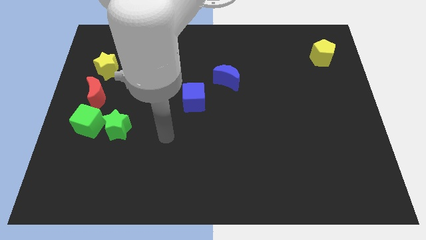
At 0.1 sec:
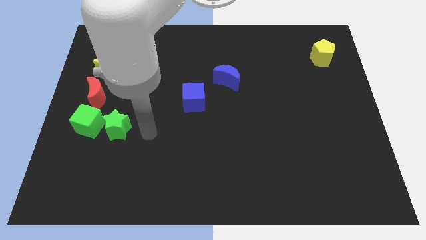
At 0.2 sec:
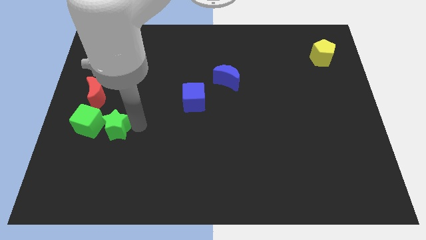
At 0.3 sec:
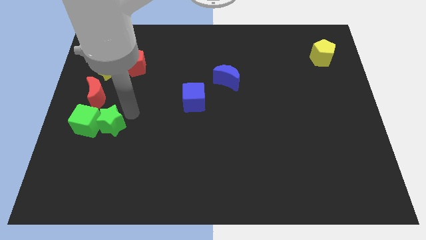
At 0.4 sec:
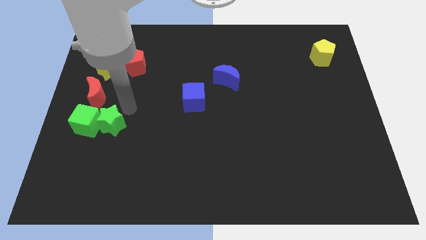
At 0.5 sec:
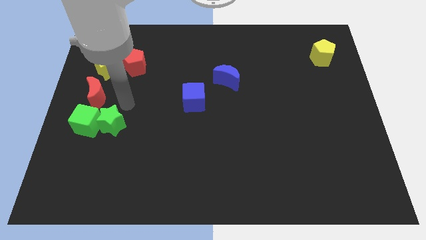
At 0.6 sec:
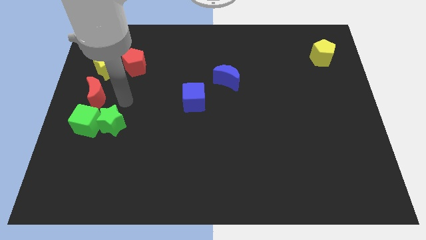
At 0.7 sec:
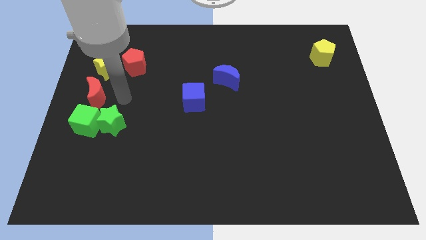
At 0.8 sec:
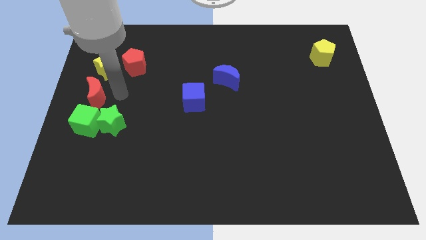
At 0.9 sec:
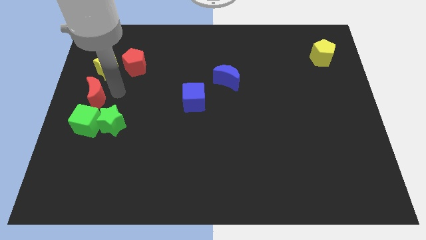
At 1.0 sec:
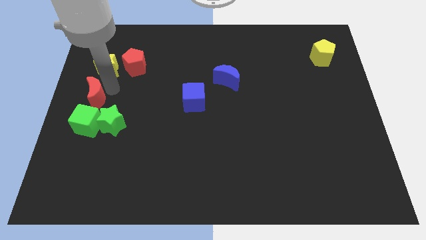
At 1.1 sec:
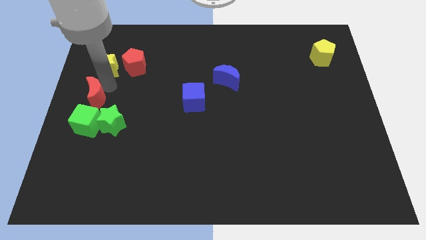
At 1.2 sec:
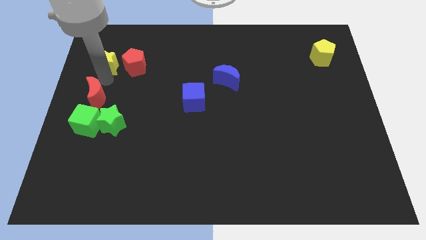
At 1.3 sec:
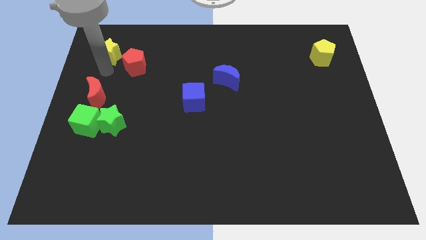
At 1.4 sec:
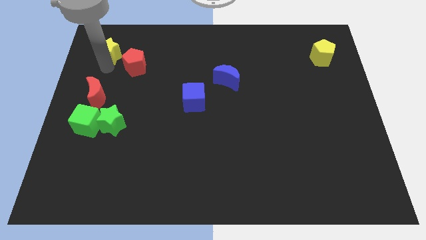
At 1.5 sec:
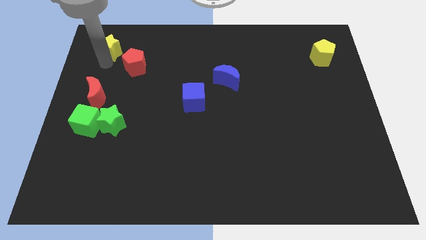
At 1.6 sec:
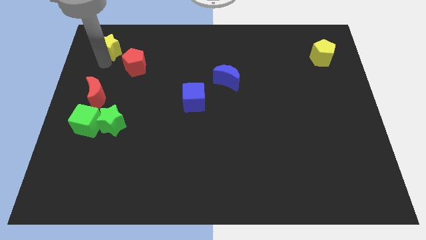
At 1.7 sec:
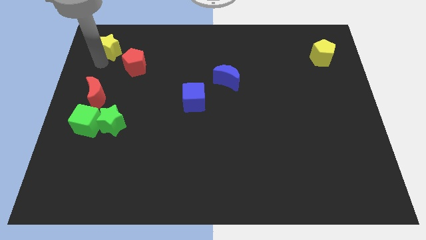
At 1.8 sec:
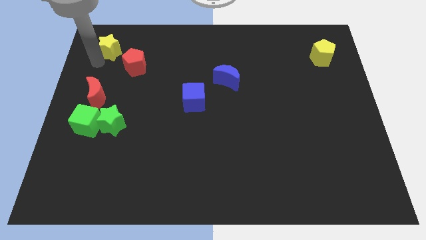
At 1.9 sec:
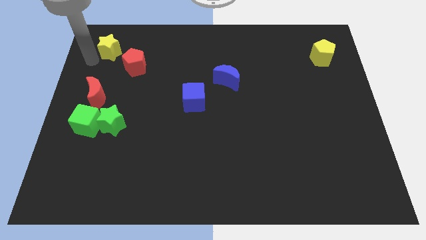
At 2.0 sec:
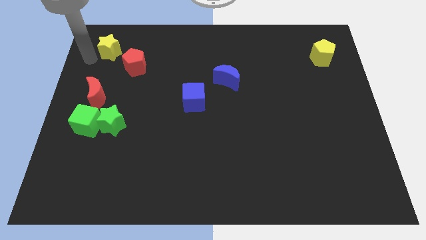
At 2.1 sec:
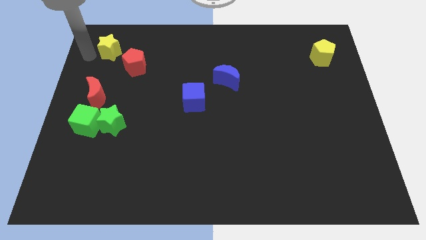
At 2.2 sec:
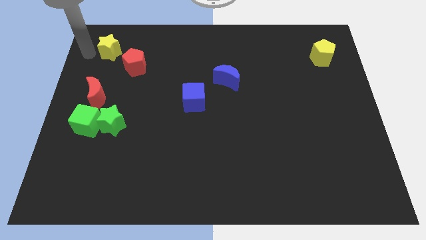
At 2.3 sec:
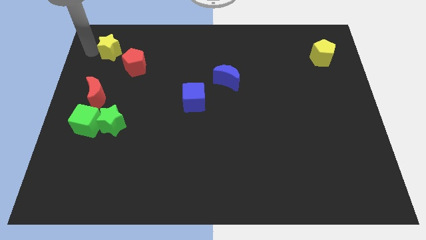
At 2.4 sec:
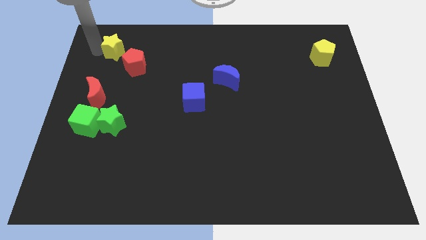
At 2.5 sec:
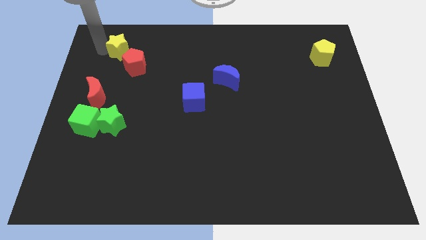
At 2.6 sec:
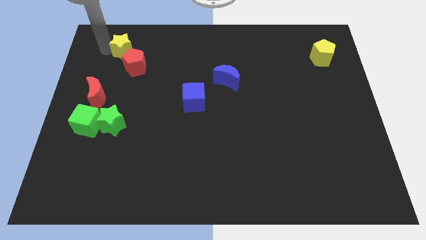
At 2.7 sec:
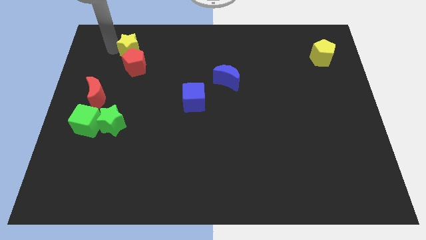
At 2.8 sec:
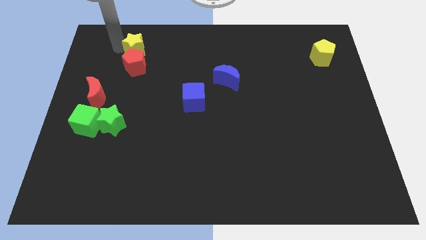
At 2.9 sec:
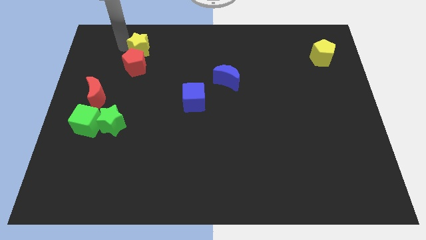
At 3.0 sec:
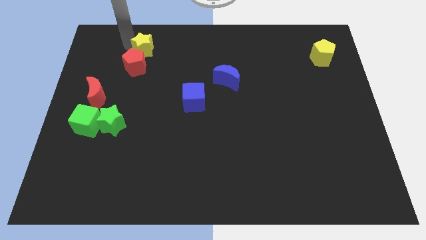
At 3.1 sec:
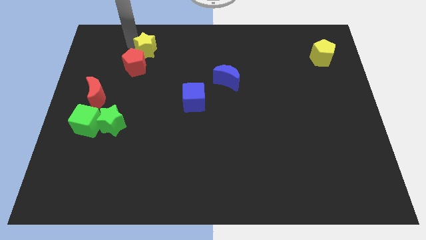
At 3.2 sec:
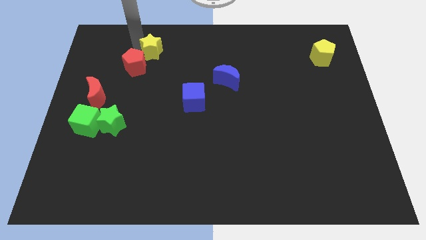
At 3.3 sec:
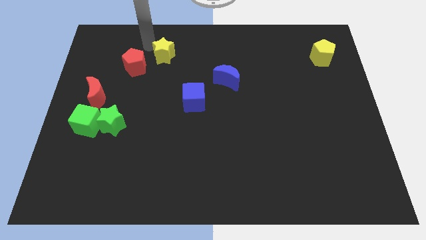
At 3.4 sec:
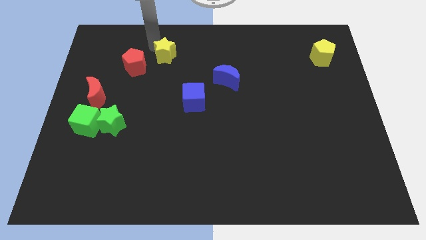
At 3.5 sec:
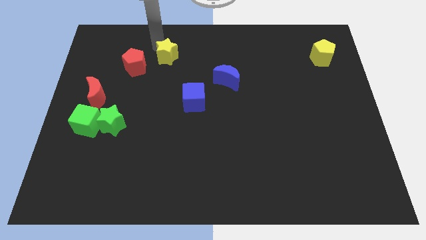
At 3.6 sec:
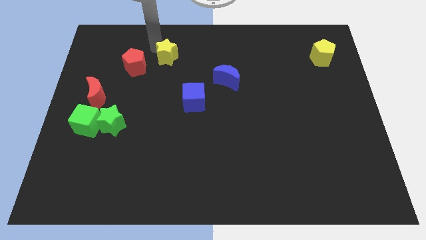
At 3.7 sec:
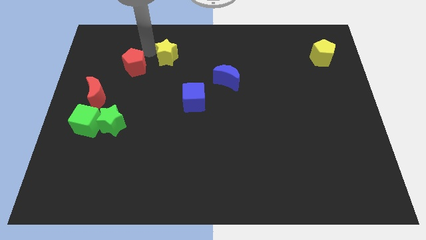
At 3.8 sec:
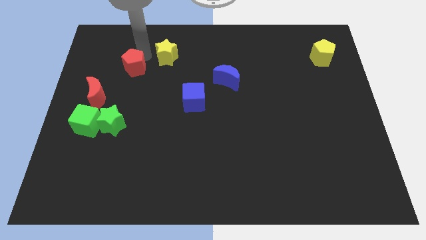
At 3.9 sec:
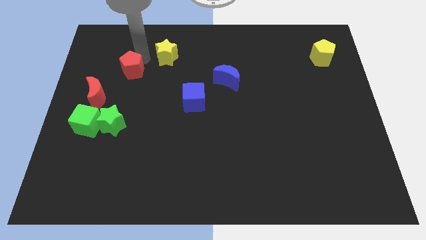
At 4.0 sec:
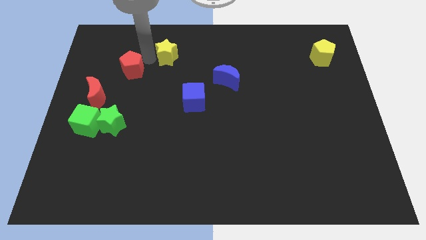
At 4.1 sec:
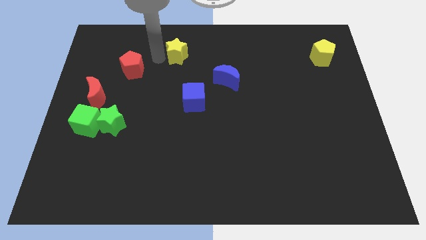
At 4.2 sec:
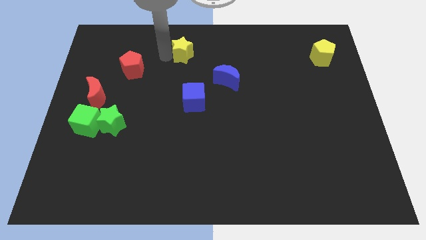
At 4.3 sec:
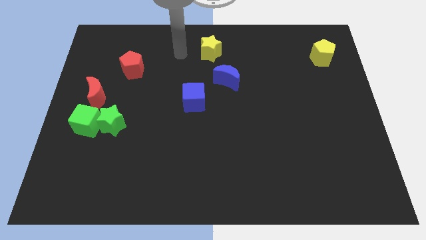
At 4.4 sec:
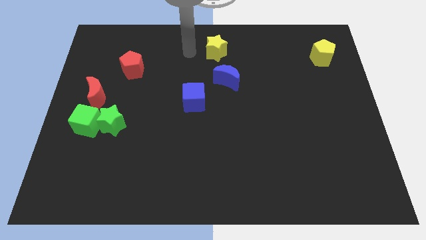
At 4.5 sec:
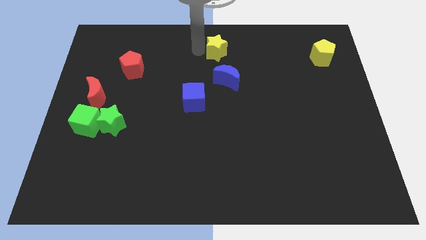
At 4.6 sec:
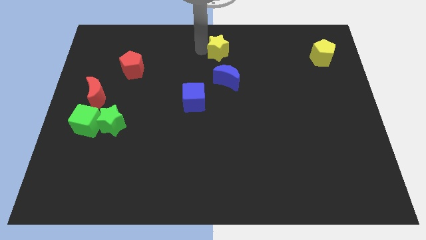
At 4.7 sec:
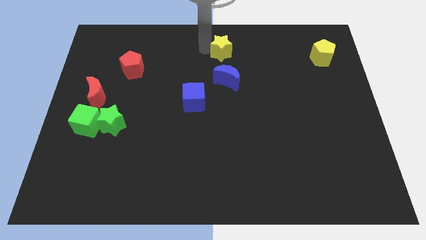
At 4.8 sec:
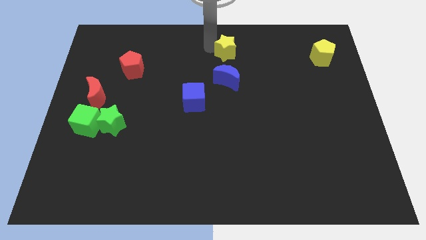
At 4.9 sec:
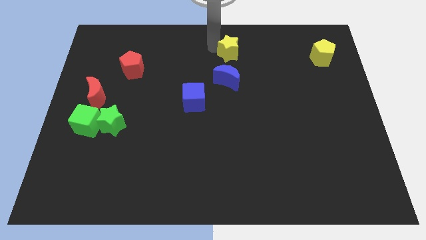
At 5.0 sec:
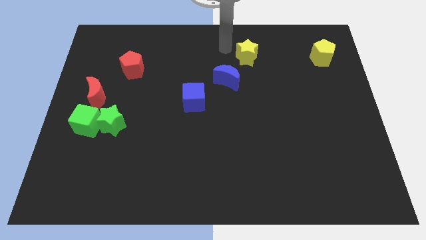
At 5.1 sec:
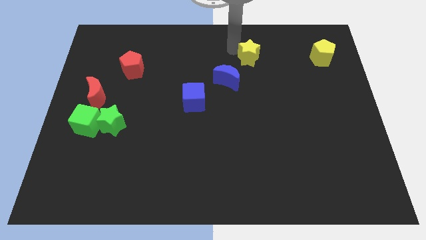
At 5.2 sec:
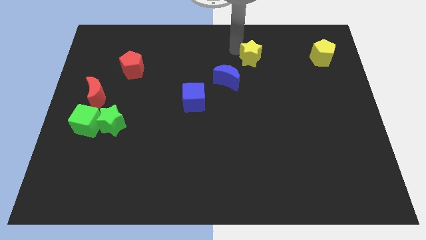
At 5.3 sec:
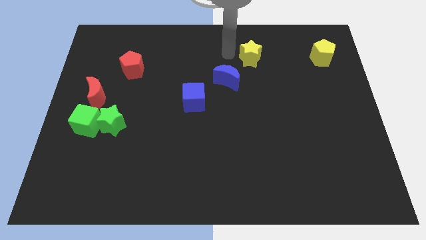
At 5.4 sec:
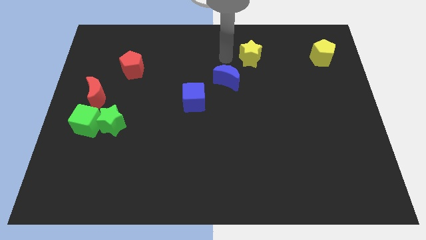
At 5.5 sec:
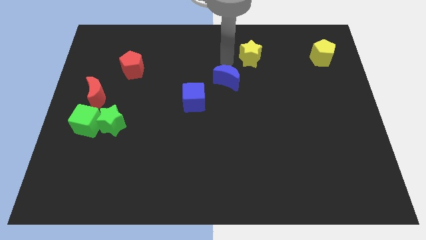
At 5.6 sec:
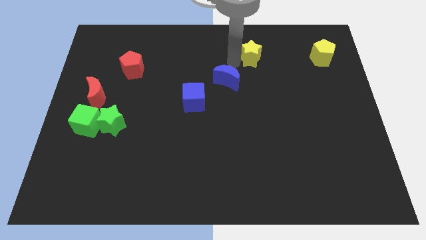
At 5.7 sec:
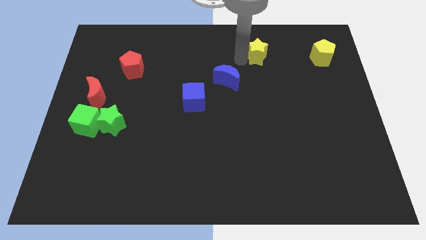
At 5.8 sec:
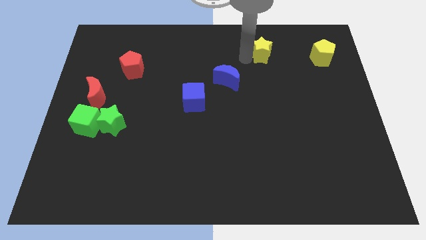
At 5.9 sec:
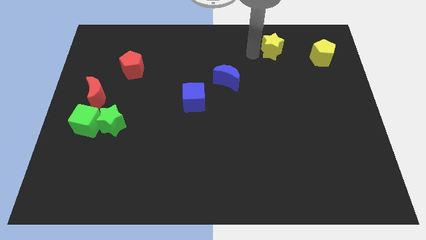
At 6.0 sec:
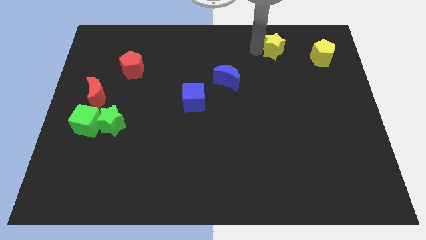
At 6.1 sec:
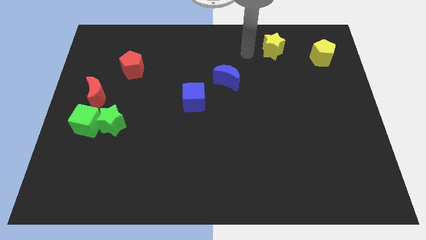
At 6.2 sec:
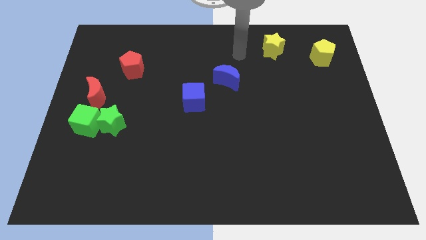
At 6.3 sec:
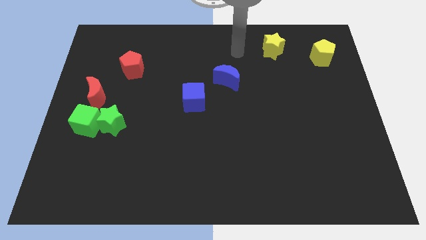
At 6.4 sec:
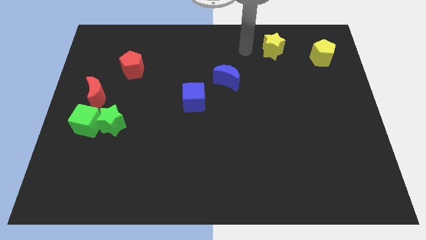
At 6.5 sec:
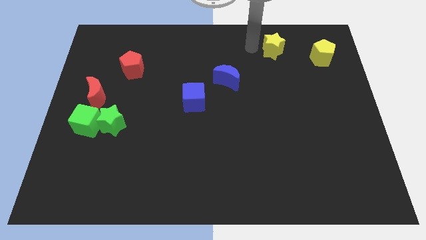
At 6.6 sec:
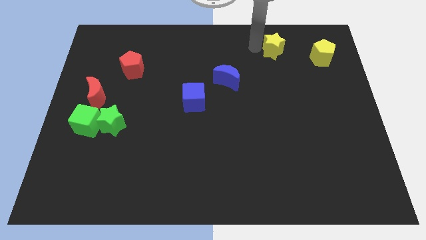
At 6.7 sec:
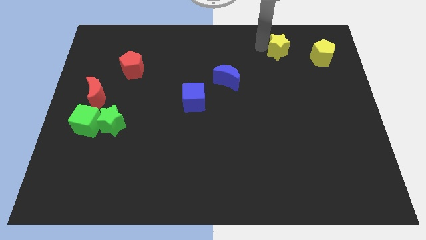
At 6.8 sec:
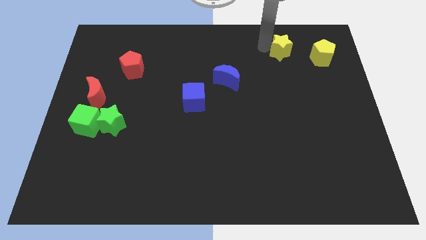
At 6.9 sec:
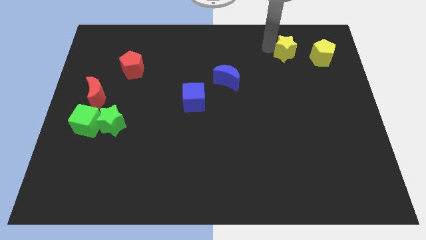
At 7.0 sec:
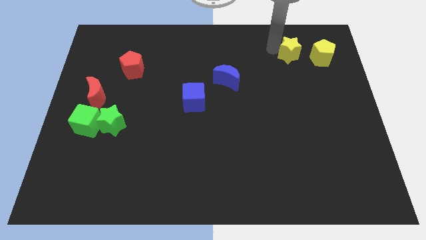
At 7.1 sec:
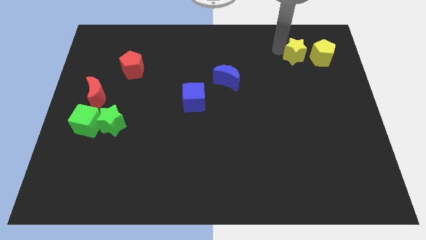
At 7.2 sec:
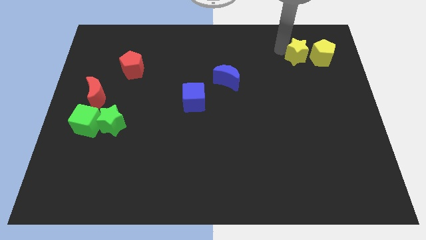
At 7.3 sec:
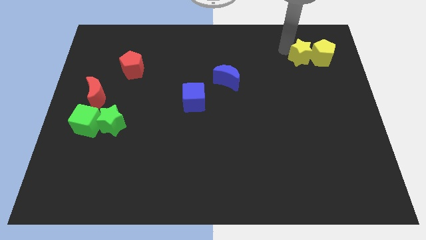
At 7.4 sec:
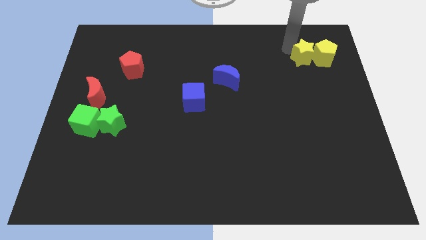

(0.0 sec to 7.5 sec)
push the yellow star to the yellow pentagon

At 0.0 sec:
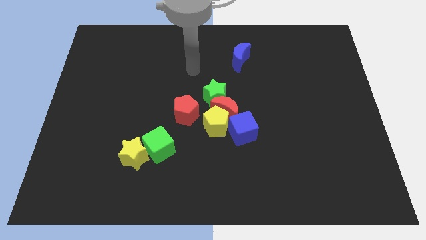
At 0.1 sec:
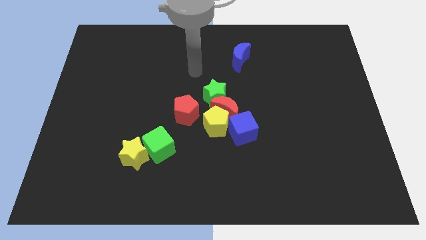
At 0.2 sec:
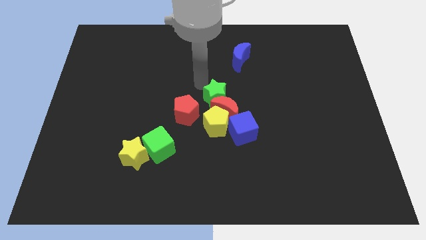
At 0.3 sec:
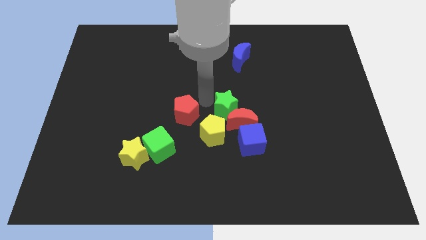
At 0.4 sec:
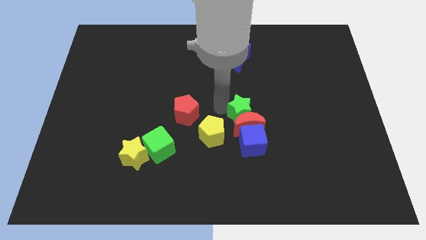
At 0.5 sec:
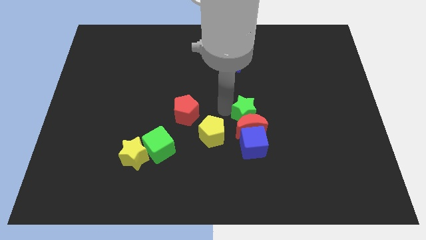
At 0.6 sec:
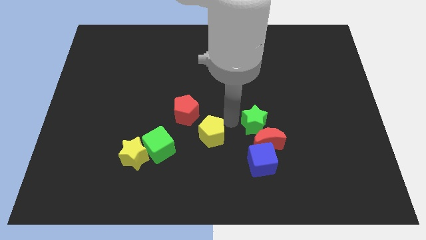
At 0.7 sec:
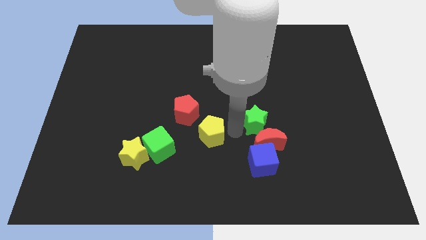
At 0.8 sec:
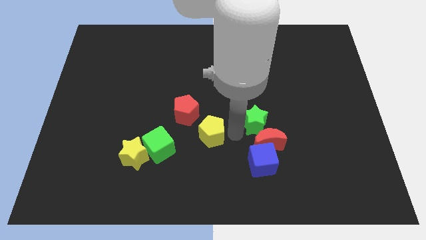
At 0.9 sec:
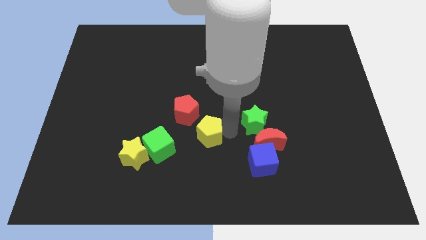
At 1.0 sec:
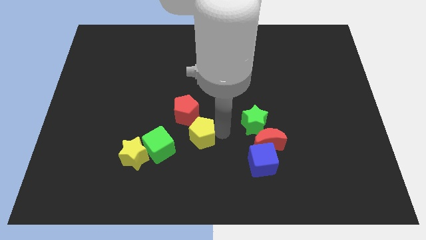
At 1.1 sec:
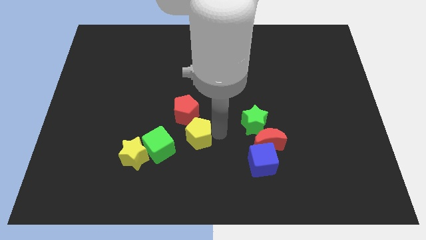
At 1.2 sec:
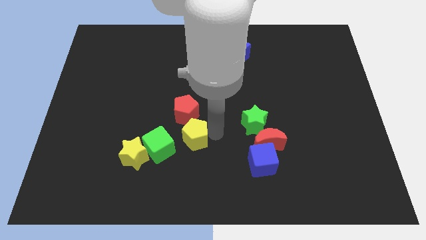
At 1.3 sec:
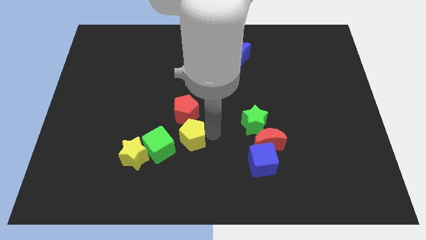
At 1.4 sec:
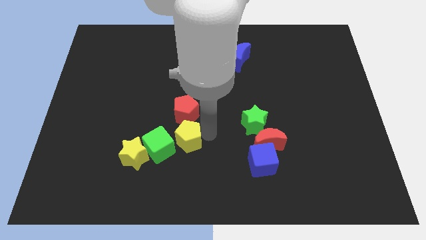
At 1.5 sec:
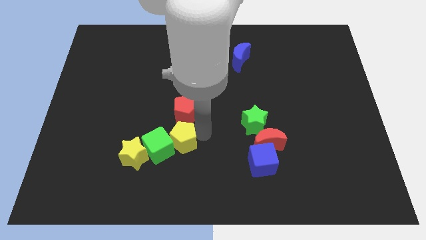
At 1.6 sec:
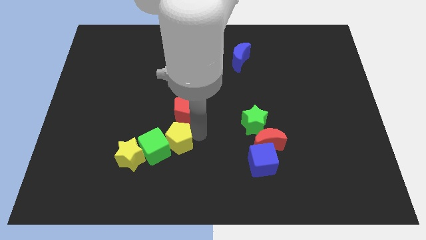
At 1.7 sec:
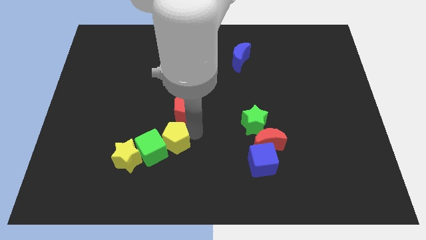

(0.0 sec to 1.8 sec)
move the yellow pentagon towards the green cube
